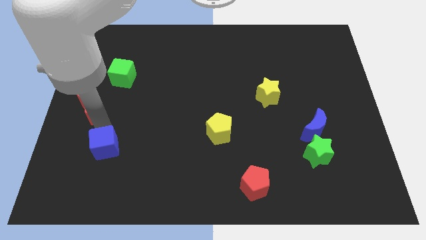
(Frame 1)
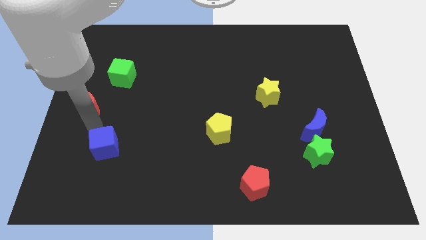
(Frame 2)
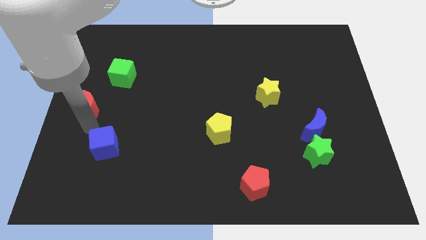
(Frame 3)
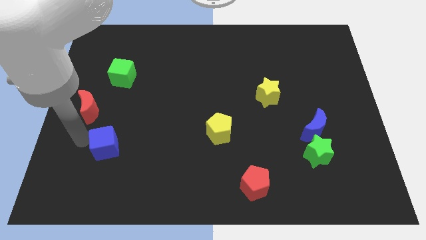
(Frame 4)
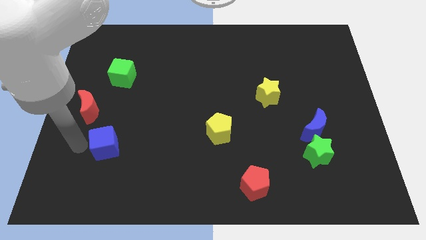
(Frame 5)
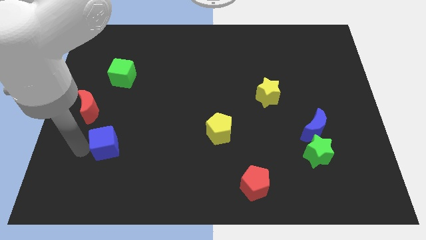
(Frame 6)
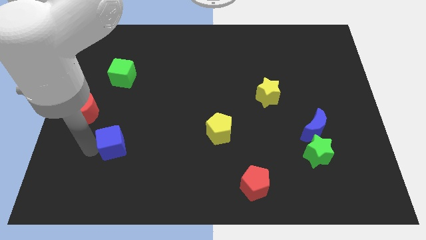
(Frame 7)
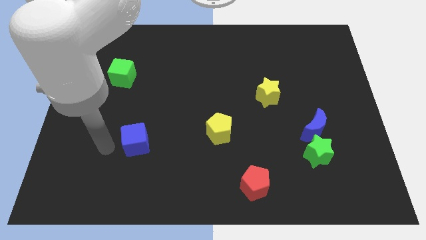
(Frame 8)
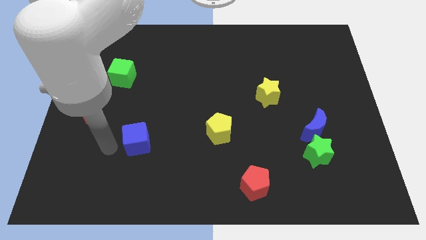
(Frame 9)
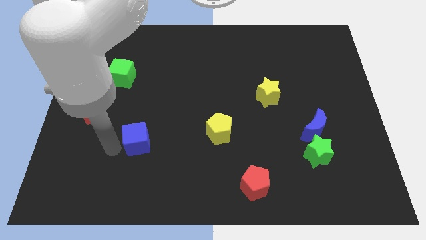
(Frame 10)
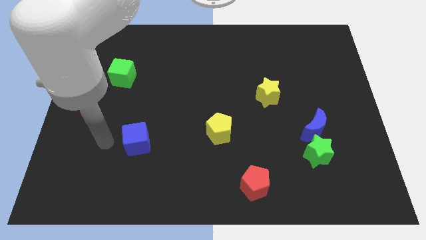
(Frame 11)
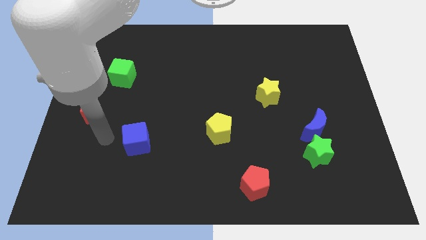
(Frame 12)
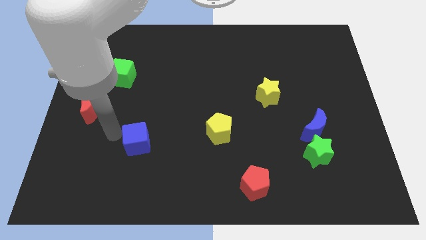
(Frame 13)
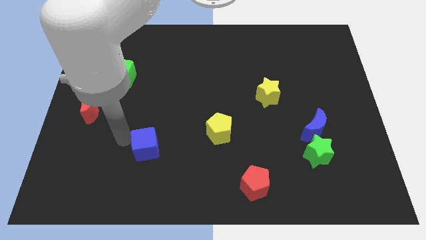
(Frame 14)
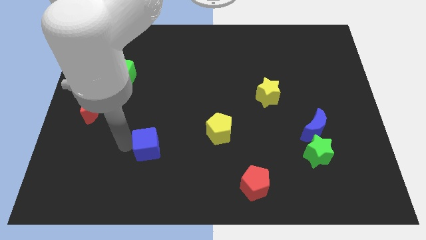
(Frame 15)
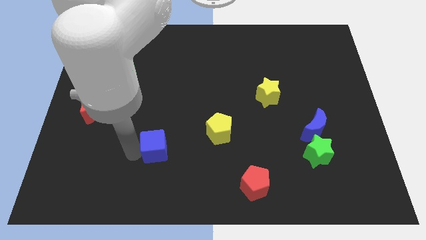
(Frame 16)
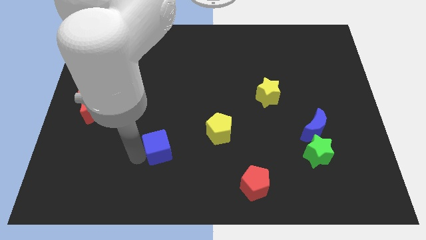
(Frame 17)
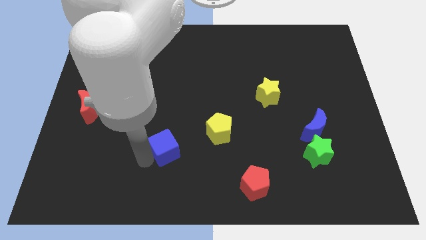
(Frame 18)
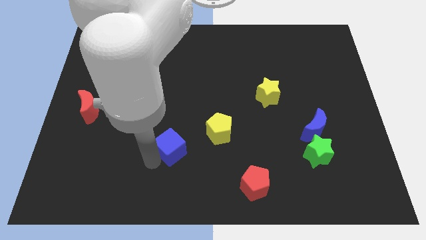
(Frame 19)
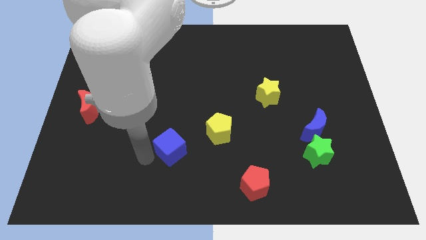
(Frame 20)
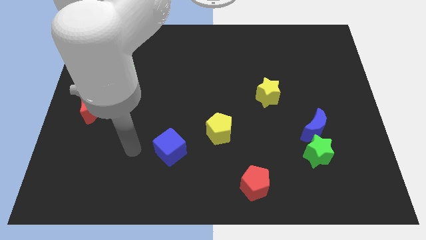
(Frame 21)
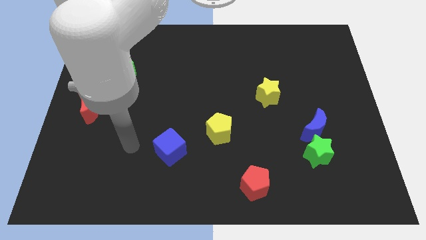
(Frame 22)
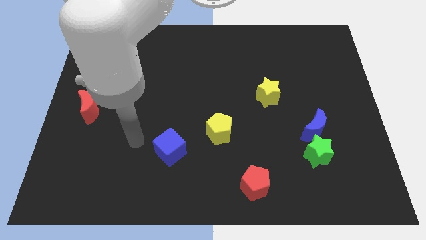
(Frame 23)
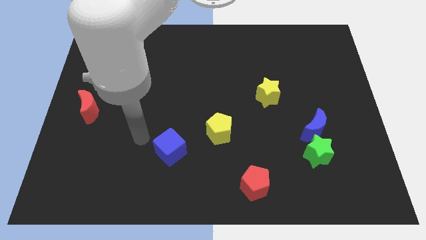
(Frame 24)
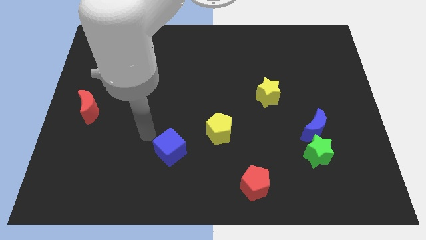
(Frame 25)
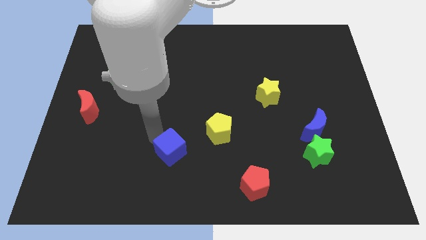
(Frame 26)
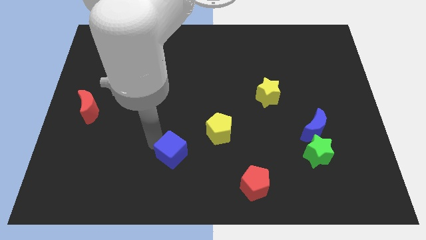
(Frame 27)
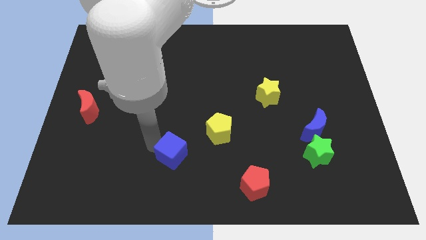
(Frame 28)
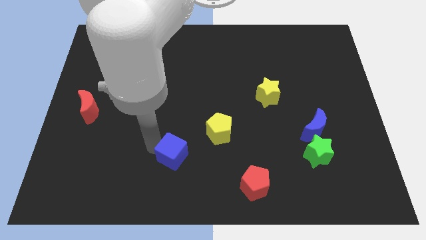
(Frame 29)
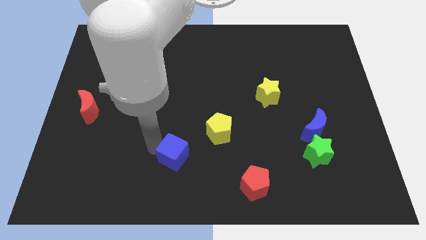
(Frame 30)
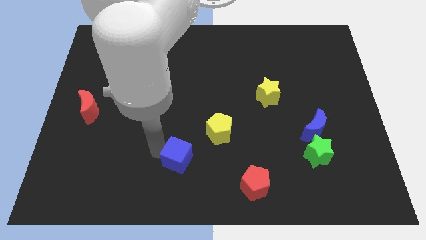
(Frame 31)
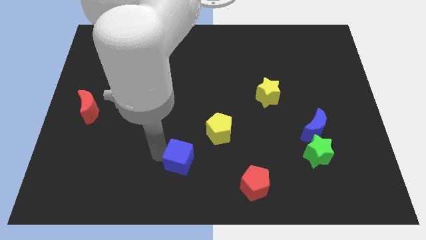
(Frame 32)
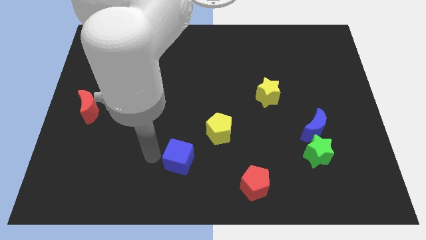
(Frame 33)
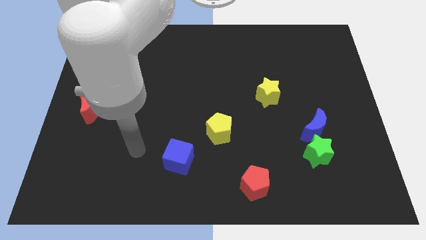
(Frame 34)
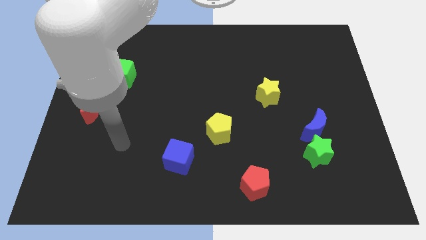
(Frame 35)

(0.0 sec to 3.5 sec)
push blue cube near to red and yellow pentagon to make a triangle

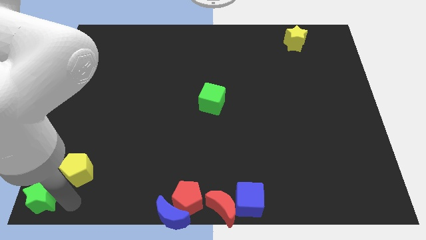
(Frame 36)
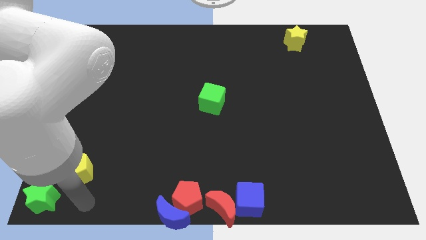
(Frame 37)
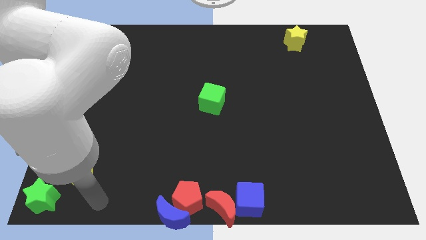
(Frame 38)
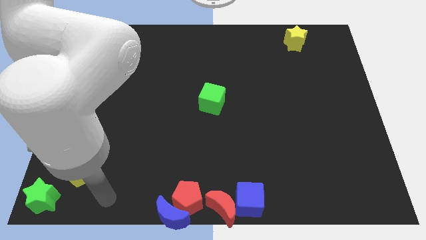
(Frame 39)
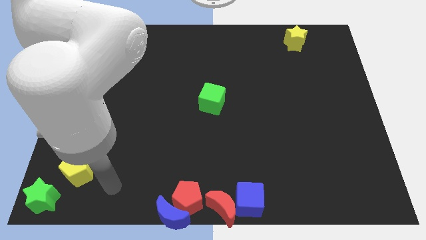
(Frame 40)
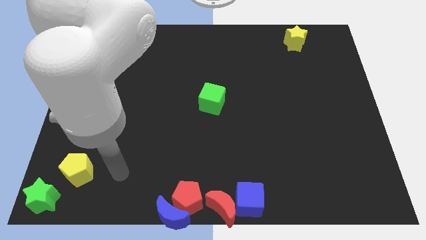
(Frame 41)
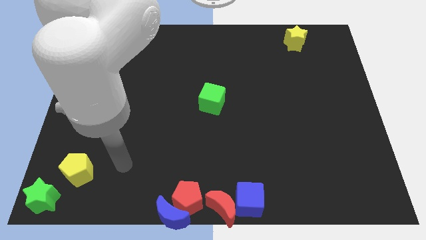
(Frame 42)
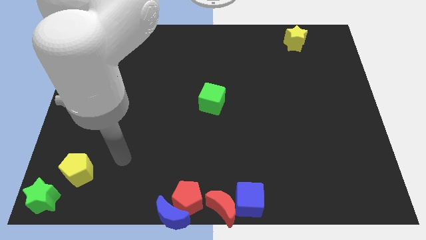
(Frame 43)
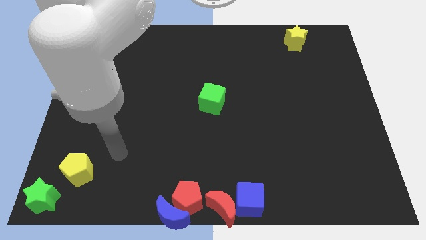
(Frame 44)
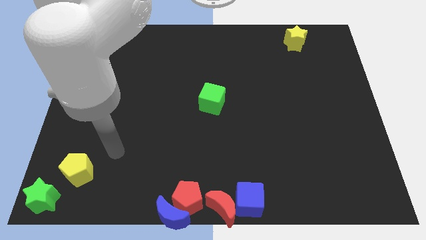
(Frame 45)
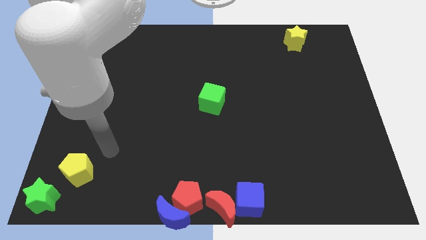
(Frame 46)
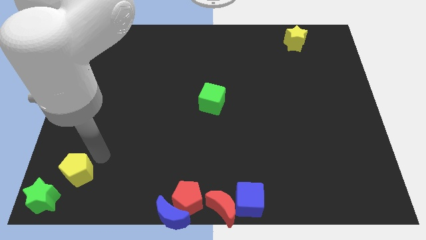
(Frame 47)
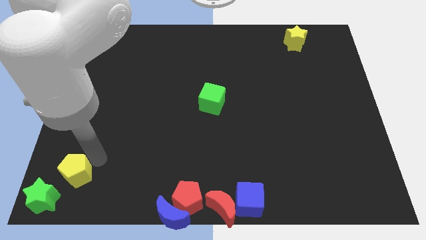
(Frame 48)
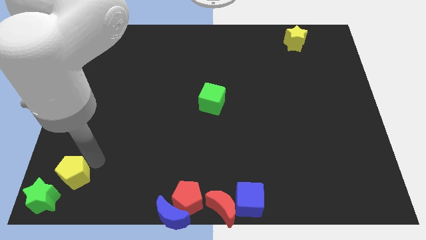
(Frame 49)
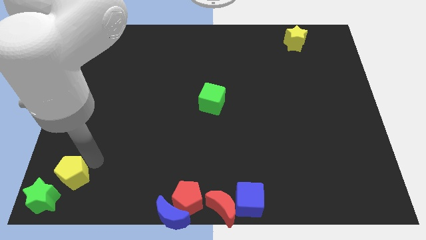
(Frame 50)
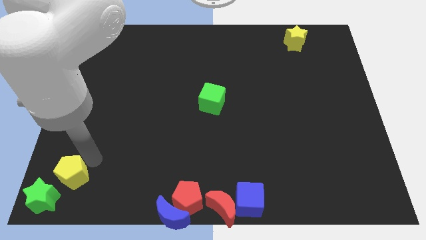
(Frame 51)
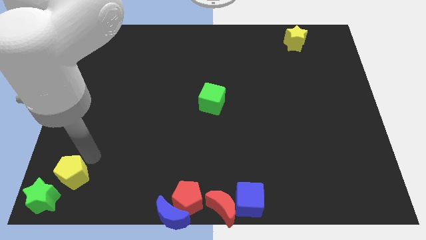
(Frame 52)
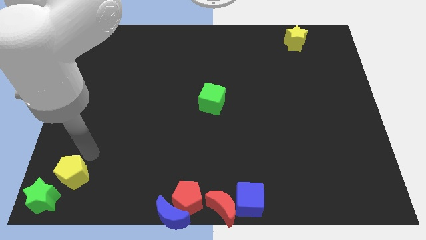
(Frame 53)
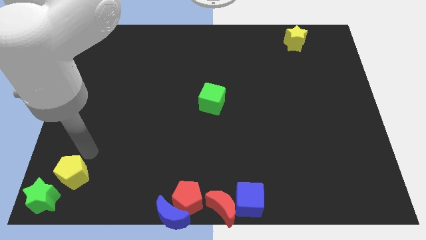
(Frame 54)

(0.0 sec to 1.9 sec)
move your arm away from the green star

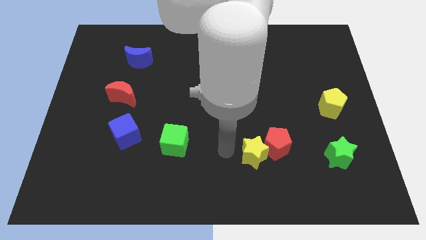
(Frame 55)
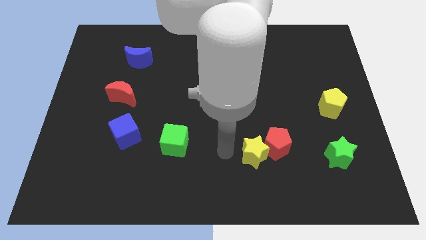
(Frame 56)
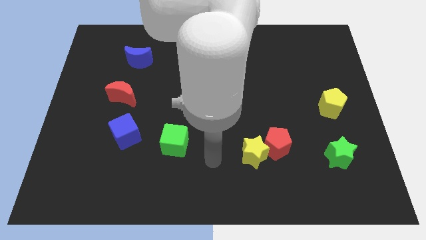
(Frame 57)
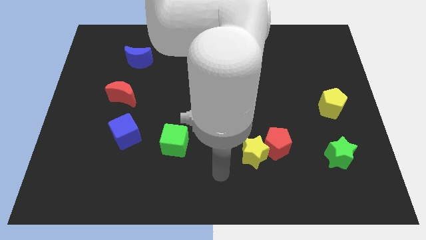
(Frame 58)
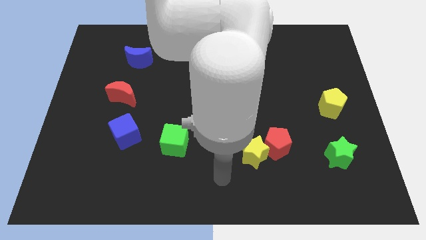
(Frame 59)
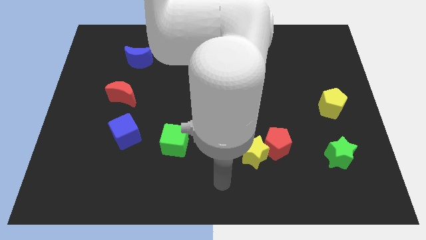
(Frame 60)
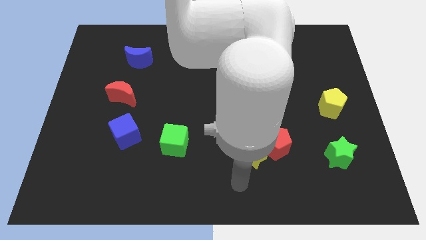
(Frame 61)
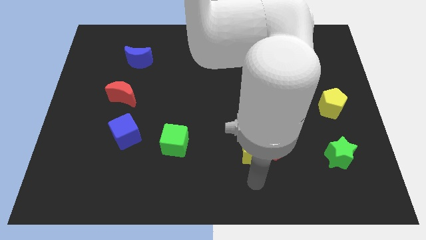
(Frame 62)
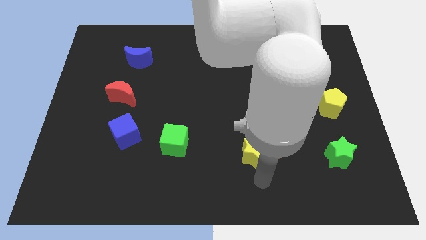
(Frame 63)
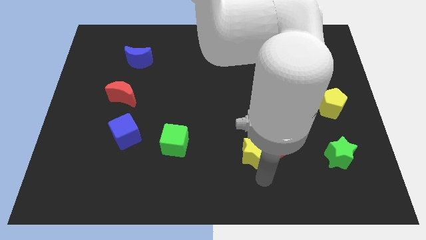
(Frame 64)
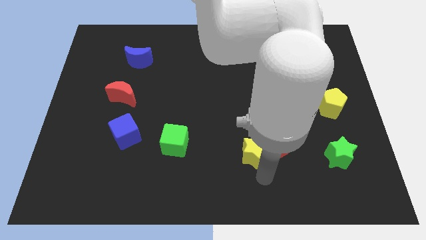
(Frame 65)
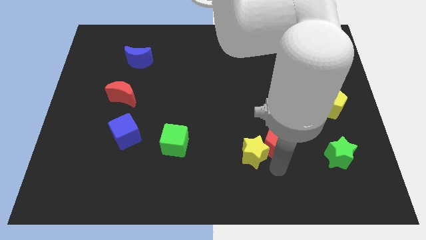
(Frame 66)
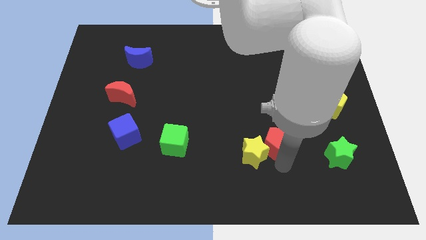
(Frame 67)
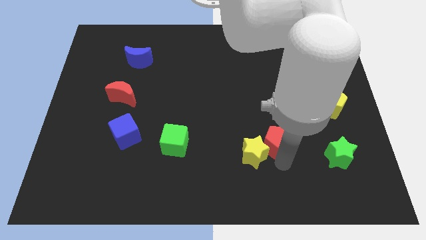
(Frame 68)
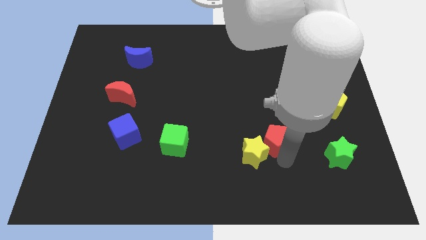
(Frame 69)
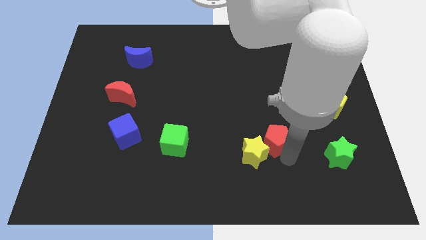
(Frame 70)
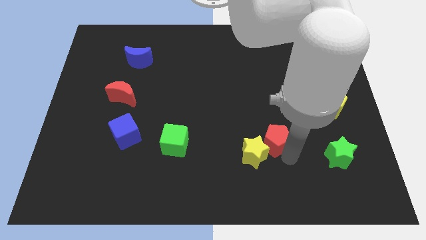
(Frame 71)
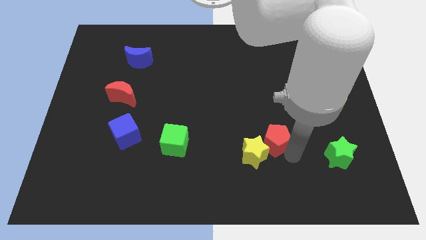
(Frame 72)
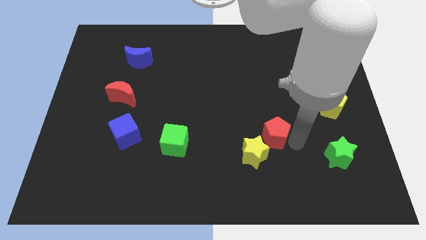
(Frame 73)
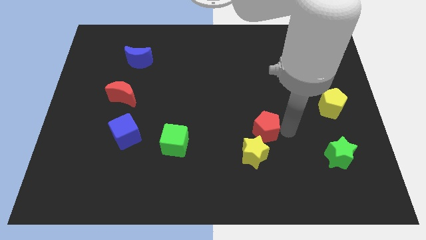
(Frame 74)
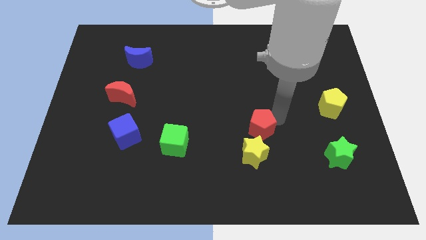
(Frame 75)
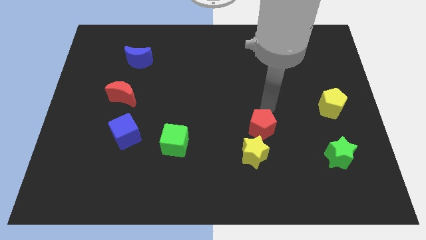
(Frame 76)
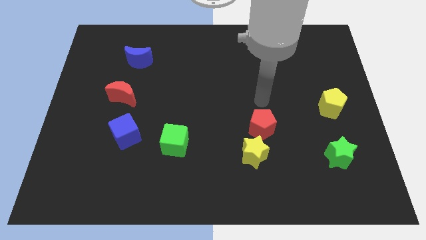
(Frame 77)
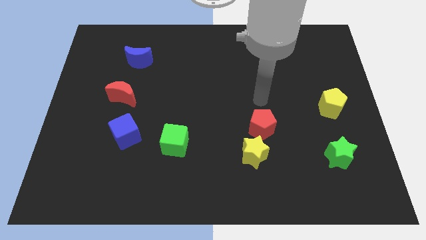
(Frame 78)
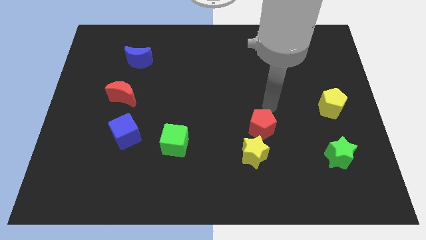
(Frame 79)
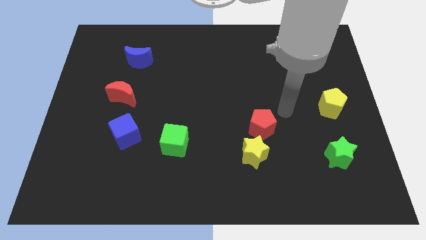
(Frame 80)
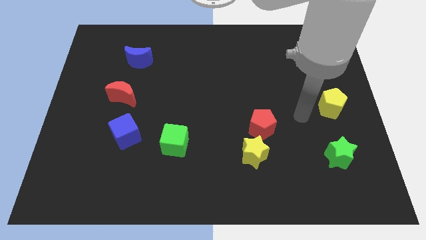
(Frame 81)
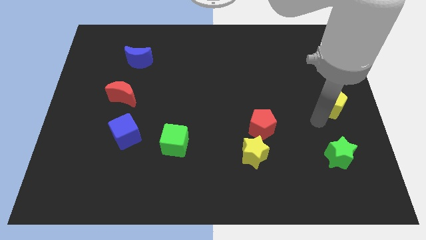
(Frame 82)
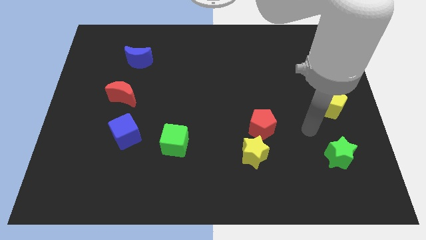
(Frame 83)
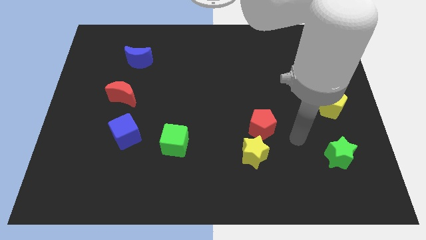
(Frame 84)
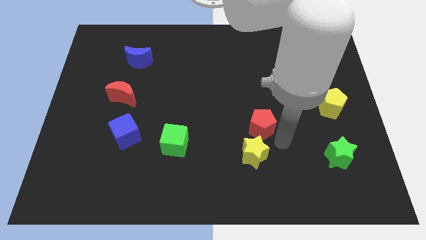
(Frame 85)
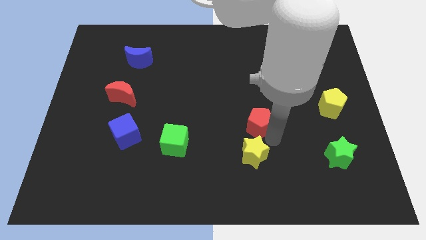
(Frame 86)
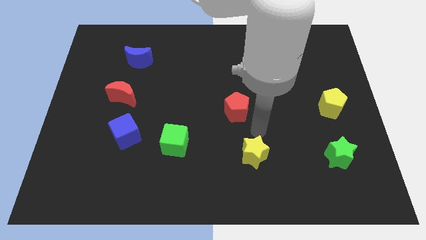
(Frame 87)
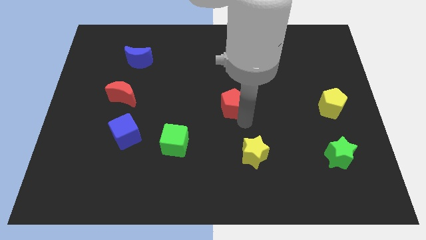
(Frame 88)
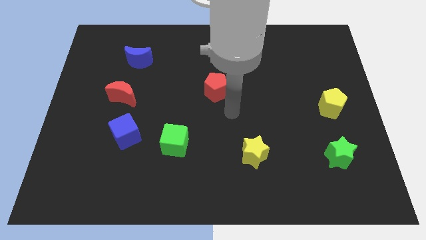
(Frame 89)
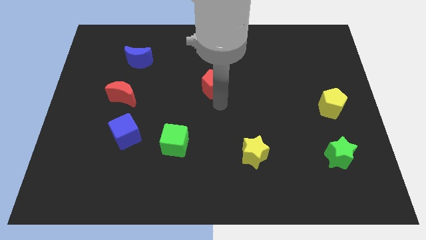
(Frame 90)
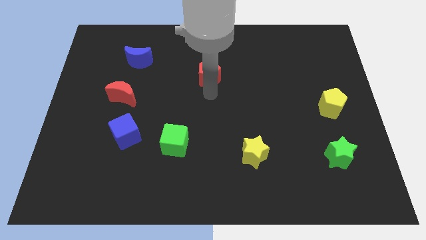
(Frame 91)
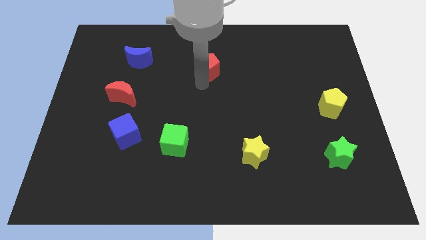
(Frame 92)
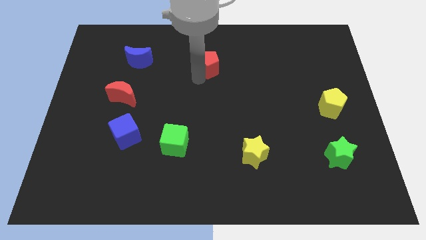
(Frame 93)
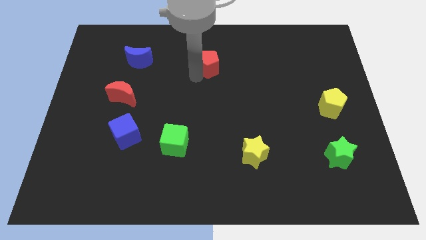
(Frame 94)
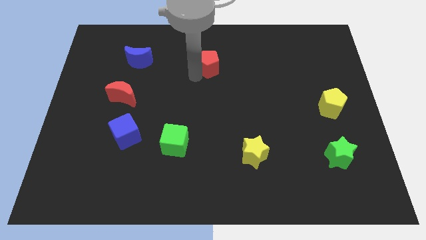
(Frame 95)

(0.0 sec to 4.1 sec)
separate the red pentagon and yellow star
